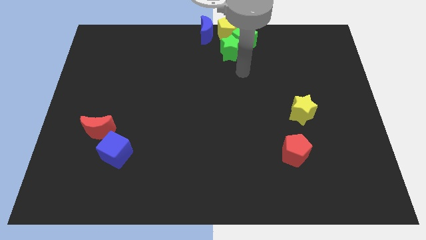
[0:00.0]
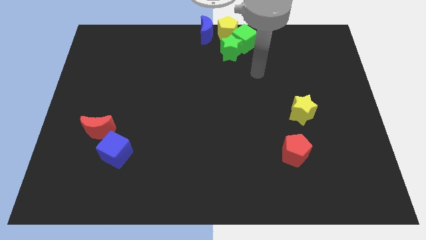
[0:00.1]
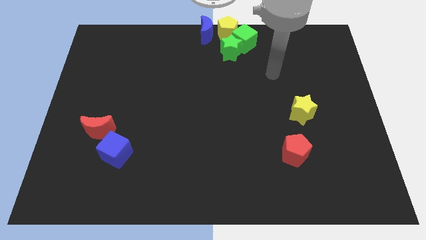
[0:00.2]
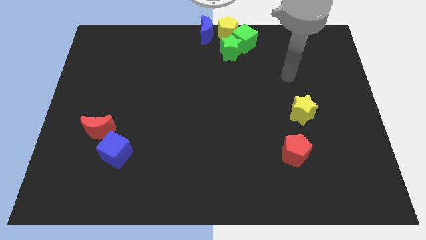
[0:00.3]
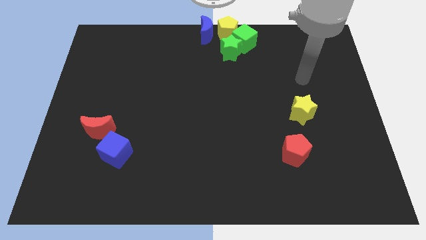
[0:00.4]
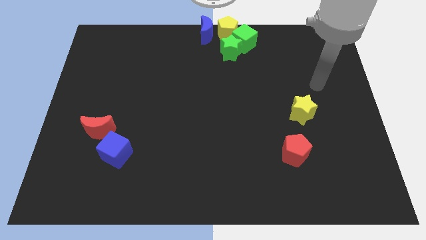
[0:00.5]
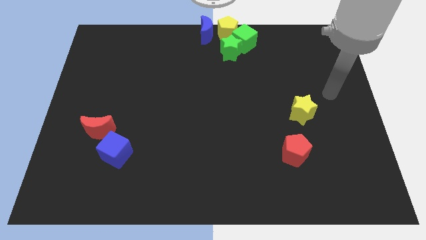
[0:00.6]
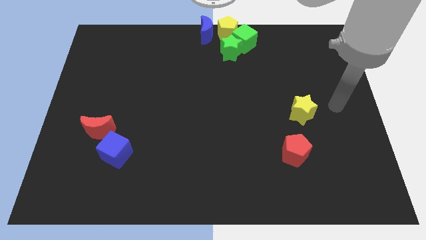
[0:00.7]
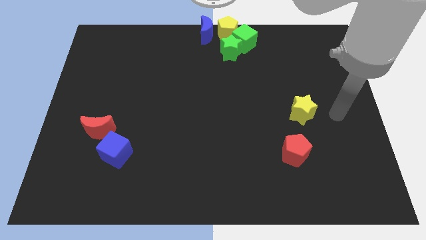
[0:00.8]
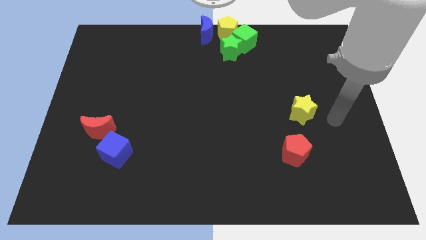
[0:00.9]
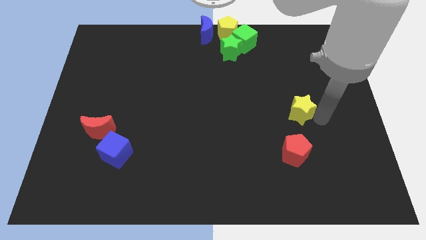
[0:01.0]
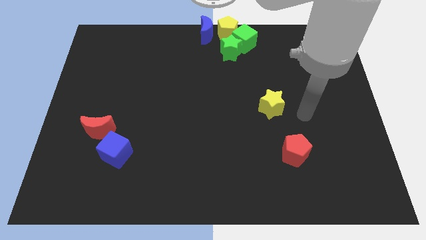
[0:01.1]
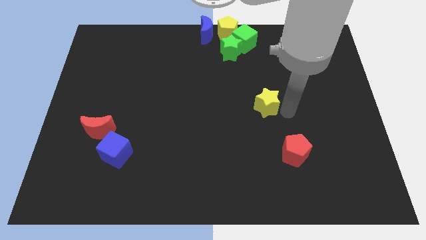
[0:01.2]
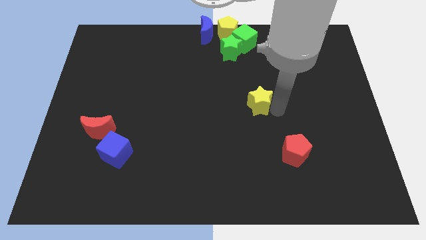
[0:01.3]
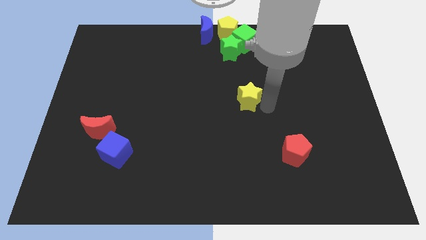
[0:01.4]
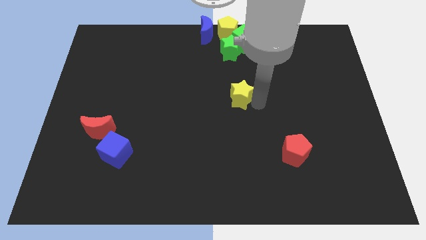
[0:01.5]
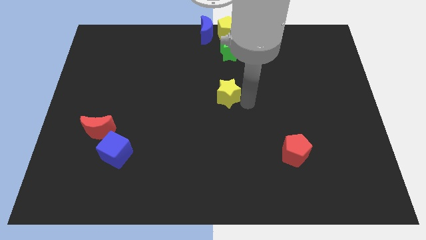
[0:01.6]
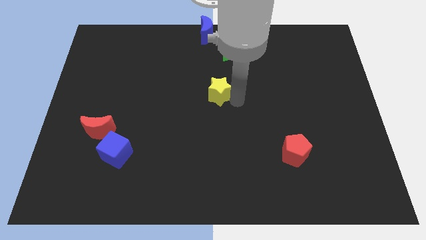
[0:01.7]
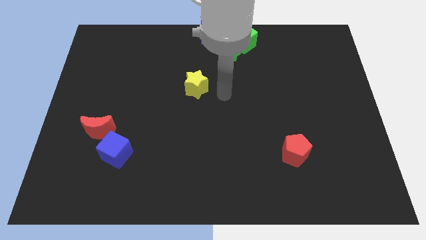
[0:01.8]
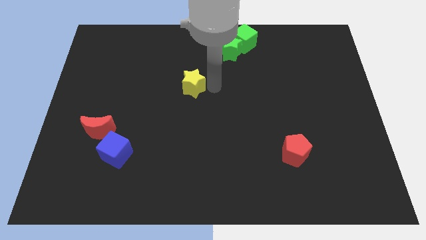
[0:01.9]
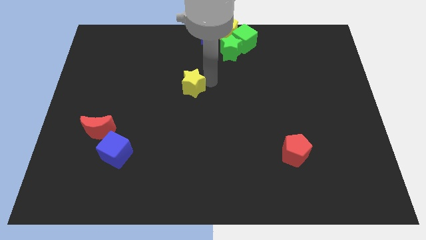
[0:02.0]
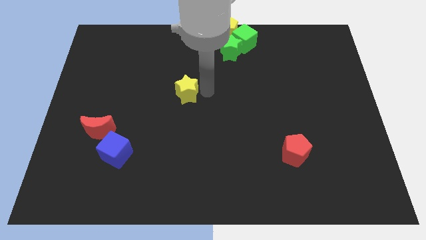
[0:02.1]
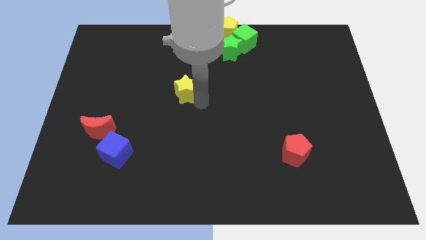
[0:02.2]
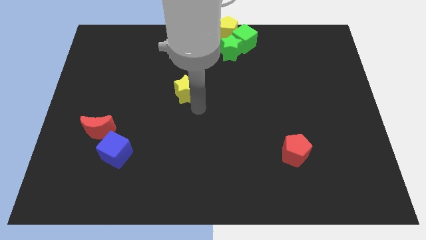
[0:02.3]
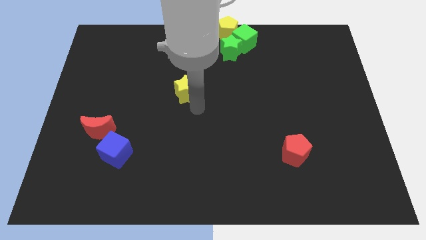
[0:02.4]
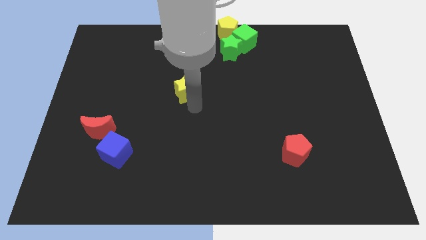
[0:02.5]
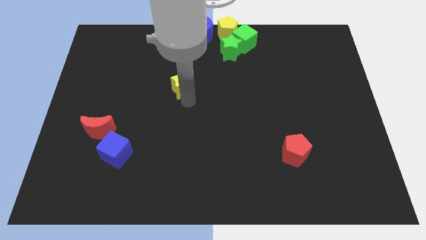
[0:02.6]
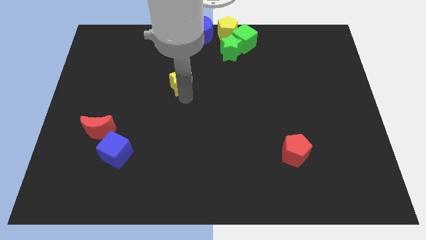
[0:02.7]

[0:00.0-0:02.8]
place yellow star in between green star and blue cube

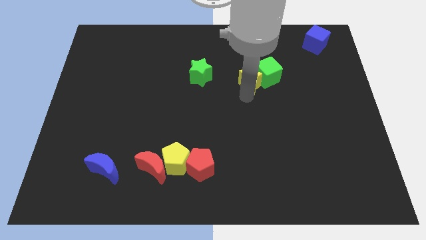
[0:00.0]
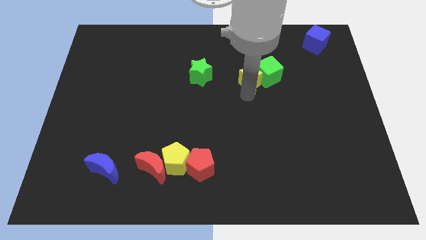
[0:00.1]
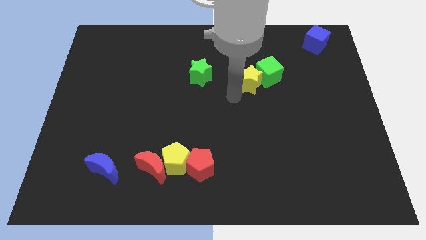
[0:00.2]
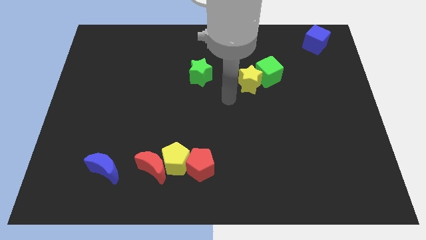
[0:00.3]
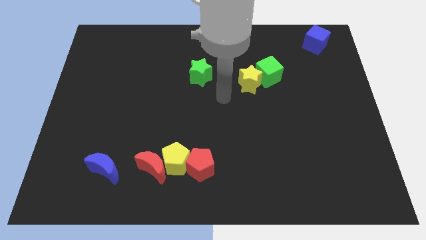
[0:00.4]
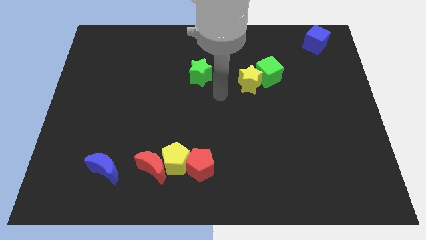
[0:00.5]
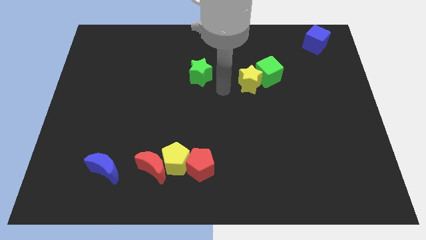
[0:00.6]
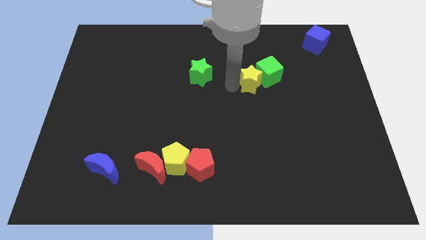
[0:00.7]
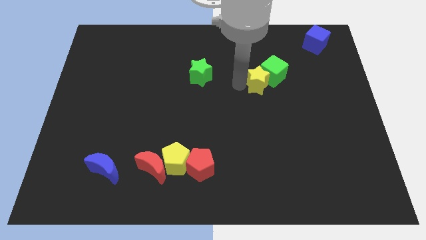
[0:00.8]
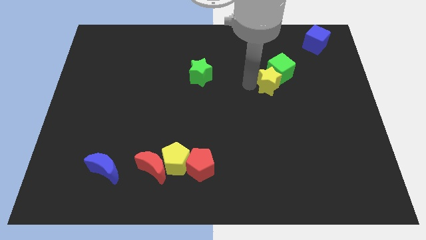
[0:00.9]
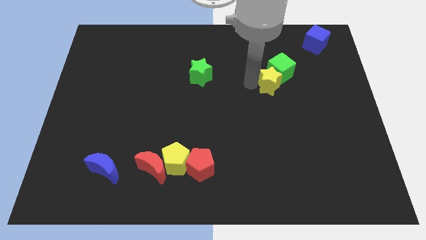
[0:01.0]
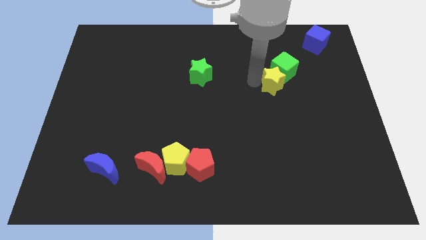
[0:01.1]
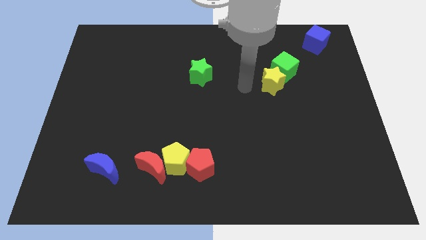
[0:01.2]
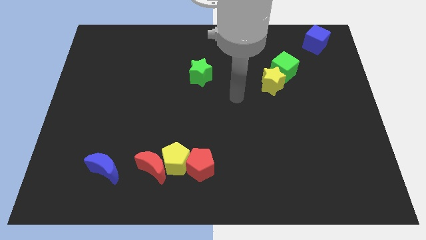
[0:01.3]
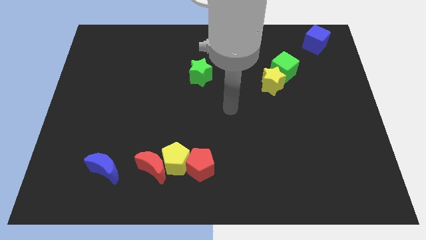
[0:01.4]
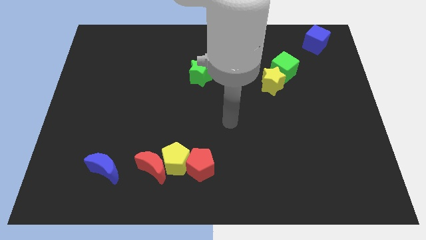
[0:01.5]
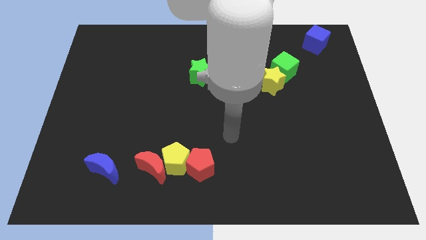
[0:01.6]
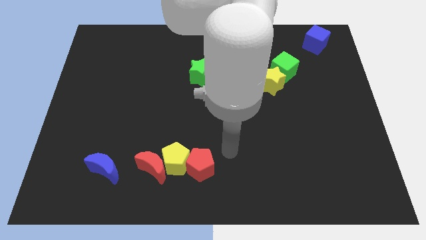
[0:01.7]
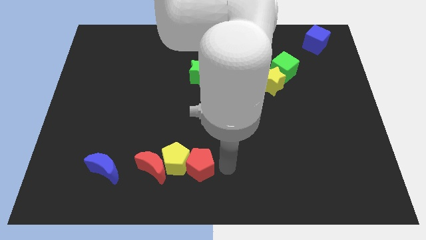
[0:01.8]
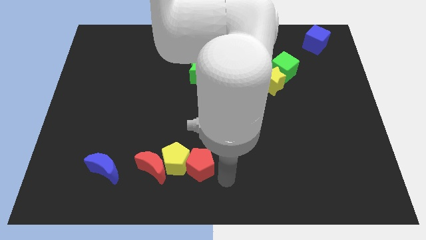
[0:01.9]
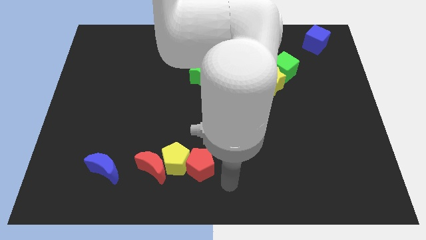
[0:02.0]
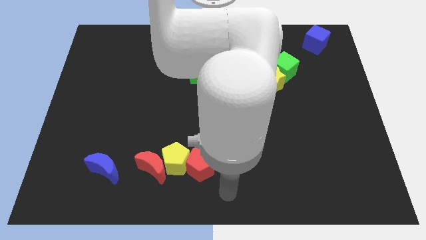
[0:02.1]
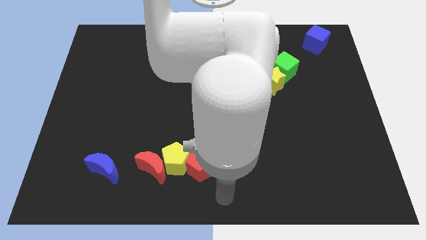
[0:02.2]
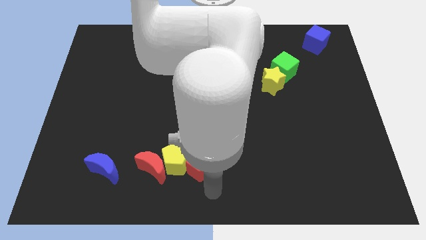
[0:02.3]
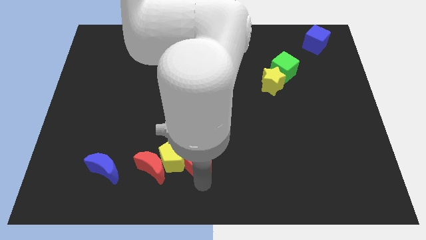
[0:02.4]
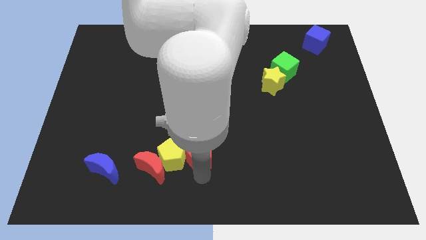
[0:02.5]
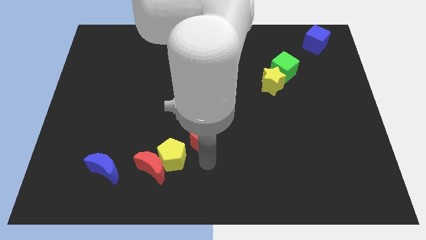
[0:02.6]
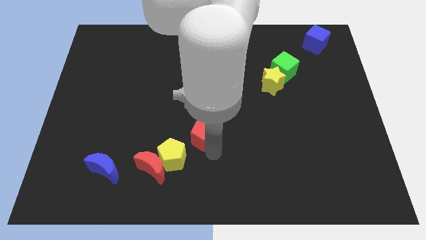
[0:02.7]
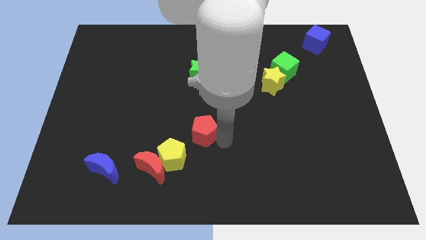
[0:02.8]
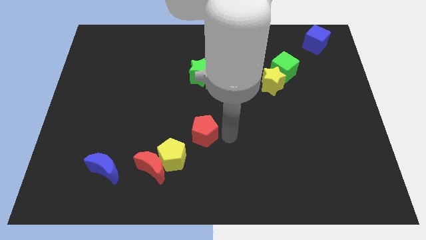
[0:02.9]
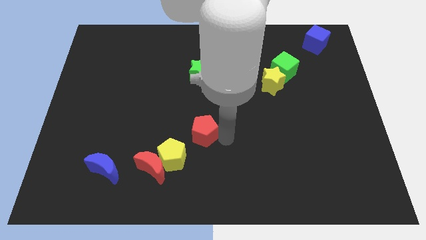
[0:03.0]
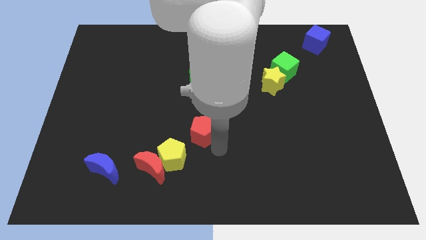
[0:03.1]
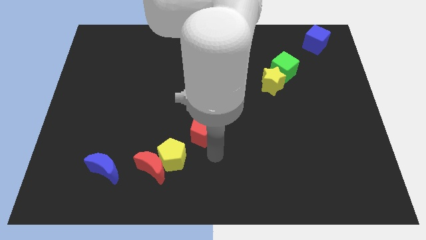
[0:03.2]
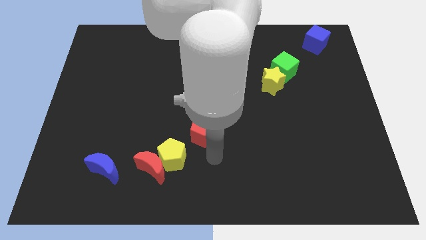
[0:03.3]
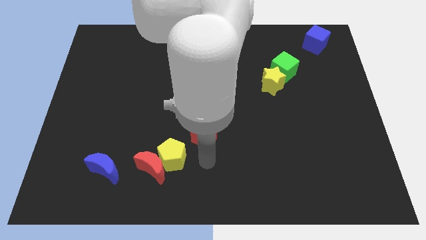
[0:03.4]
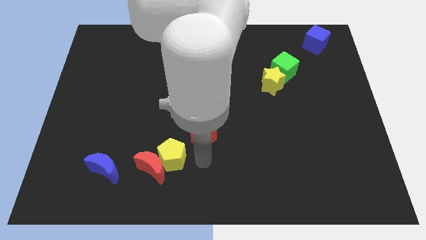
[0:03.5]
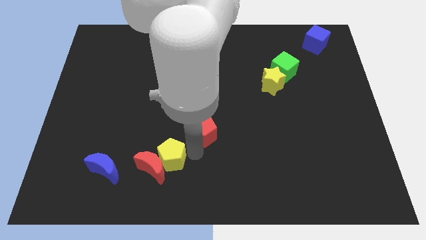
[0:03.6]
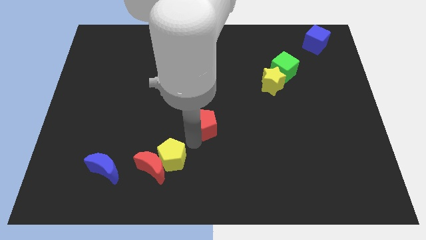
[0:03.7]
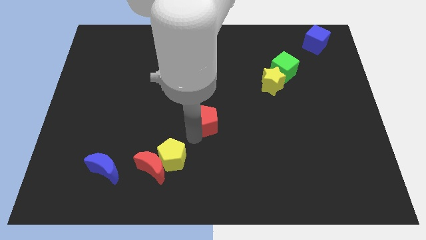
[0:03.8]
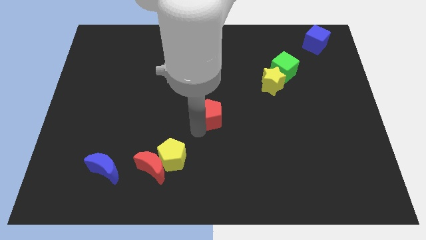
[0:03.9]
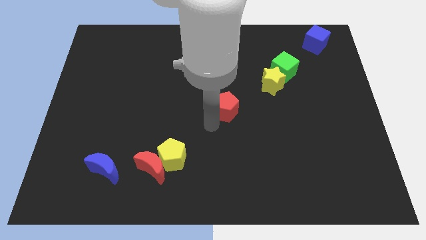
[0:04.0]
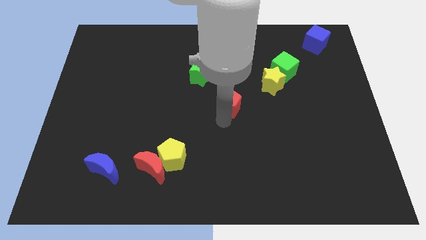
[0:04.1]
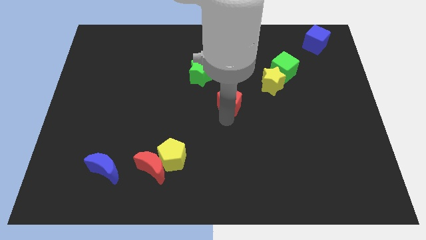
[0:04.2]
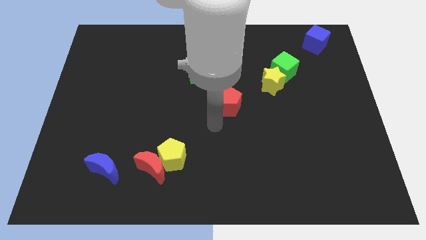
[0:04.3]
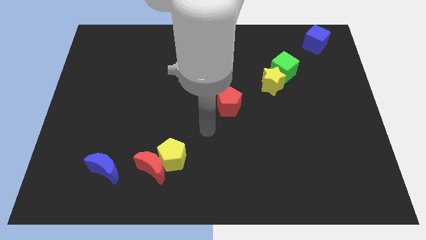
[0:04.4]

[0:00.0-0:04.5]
push red pentagon upwards

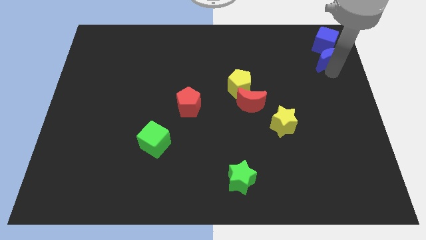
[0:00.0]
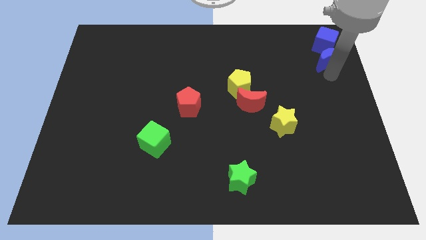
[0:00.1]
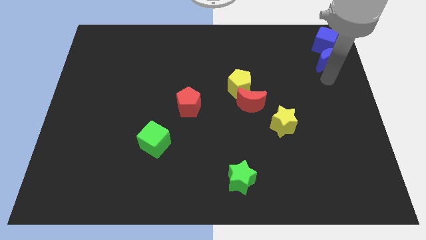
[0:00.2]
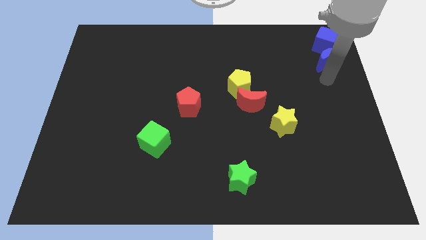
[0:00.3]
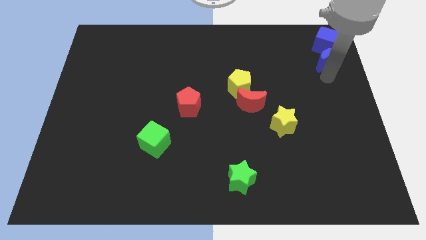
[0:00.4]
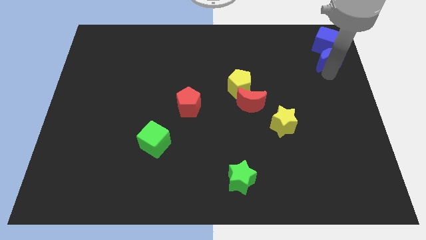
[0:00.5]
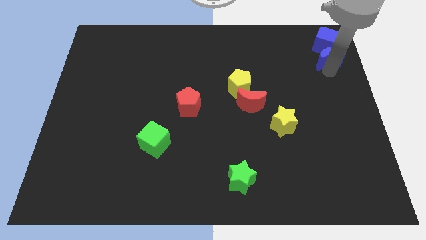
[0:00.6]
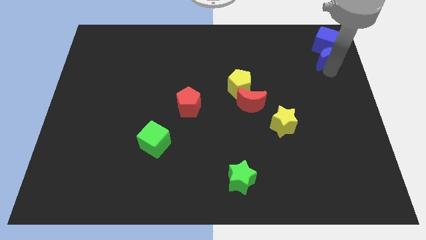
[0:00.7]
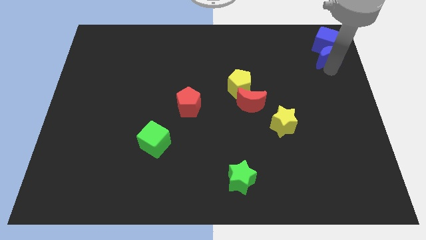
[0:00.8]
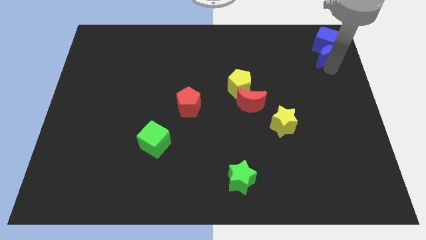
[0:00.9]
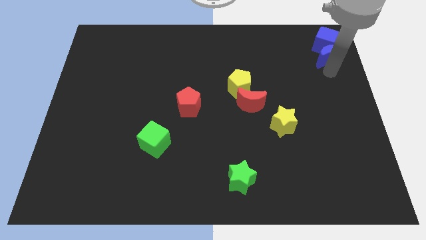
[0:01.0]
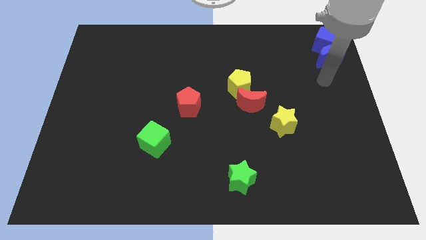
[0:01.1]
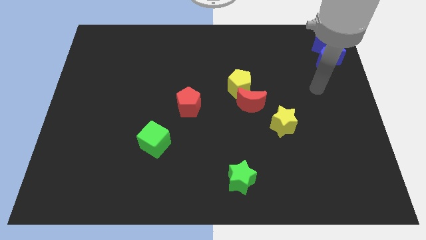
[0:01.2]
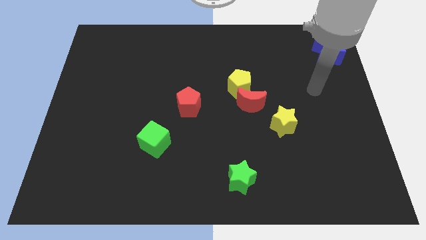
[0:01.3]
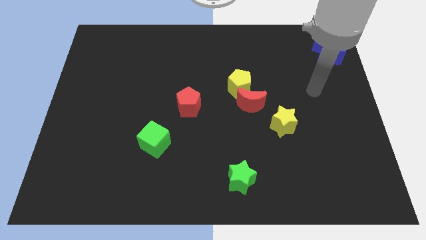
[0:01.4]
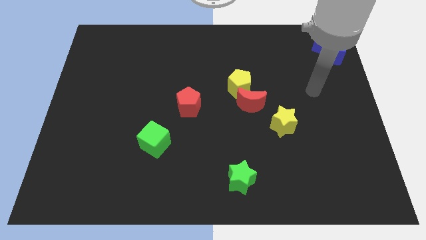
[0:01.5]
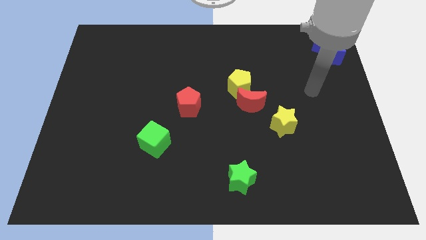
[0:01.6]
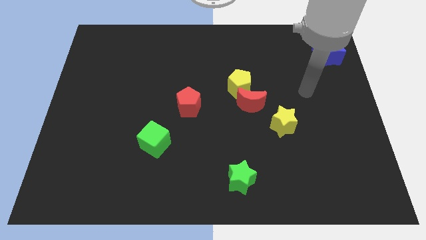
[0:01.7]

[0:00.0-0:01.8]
push the blue moon into the blue cube
